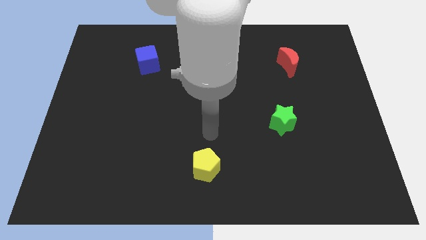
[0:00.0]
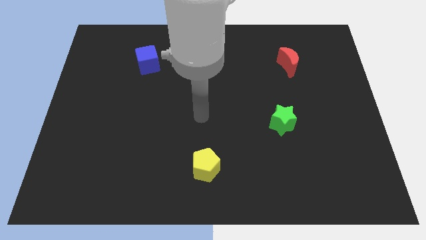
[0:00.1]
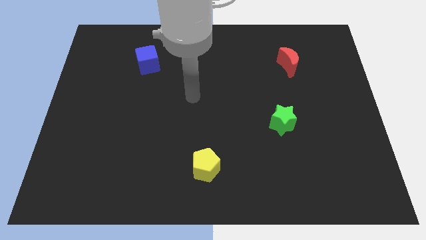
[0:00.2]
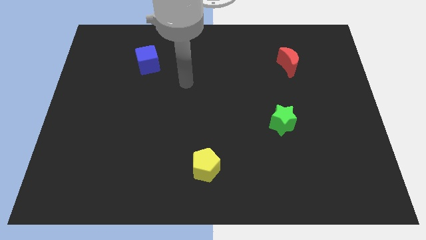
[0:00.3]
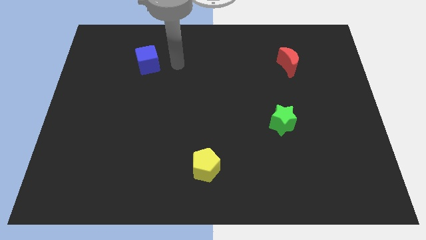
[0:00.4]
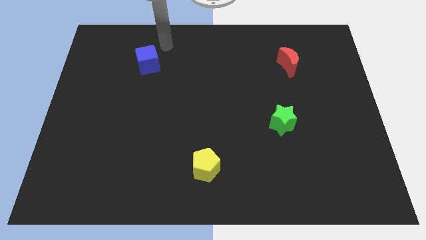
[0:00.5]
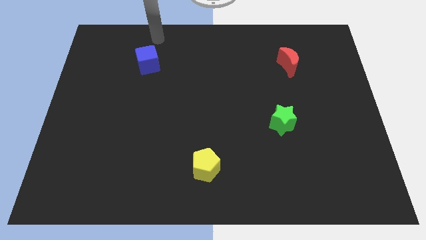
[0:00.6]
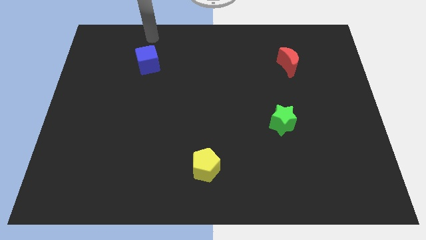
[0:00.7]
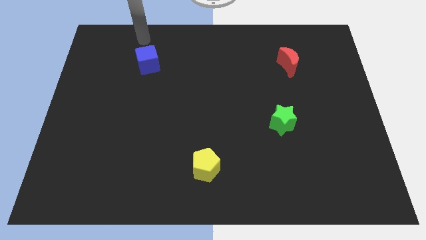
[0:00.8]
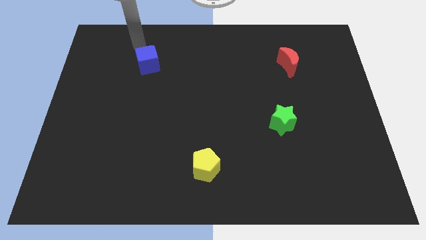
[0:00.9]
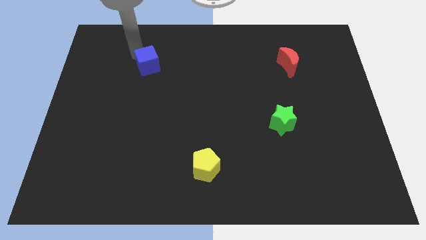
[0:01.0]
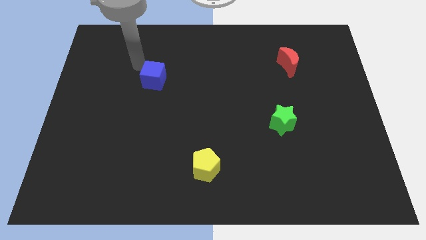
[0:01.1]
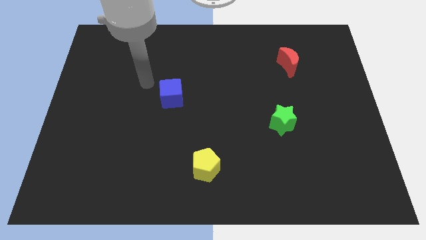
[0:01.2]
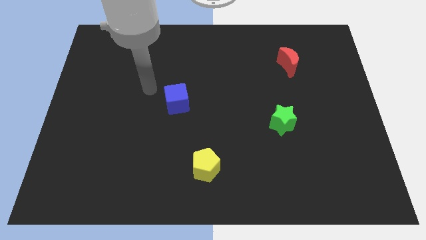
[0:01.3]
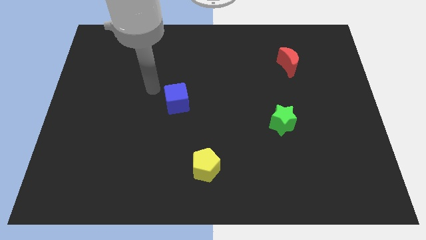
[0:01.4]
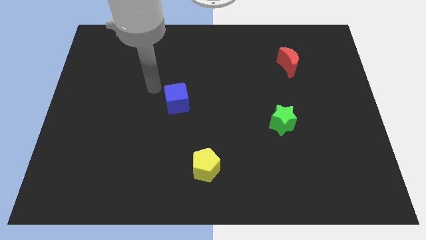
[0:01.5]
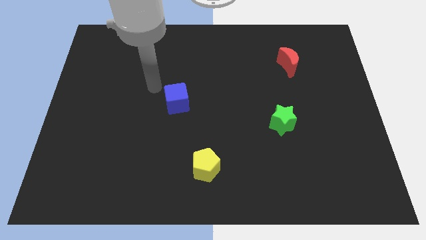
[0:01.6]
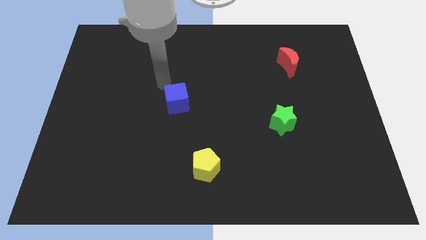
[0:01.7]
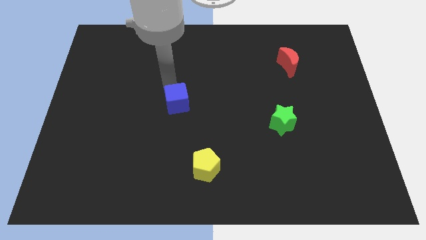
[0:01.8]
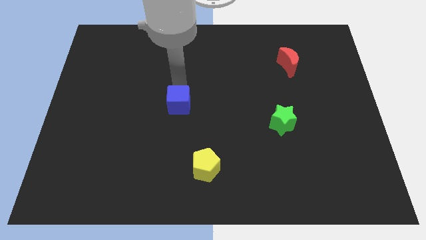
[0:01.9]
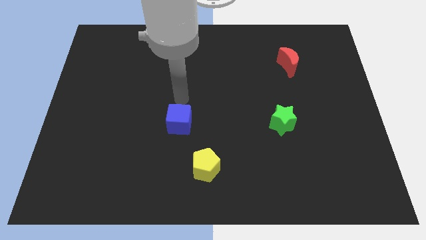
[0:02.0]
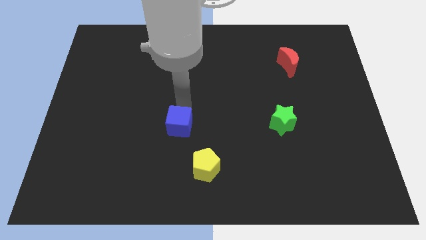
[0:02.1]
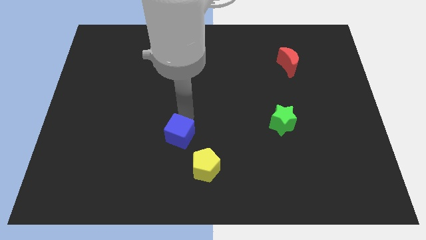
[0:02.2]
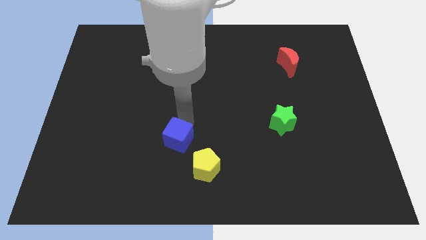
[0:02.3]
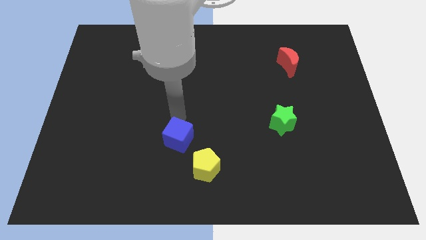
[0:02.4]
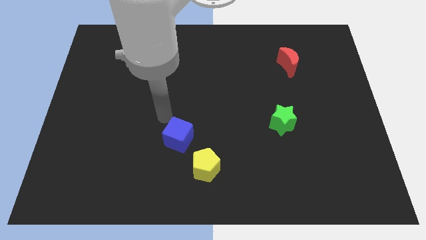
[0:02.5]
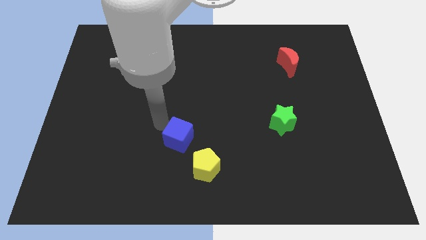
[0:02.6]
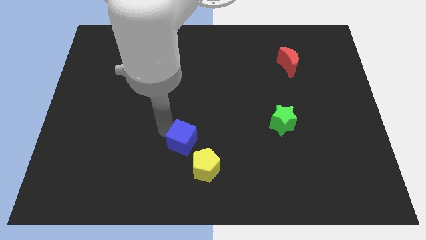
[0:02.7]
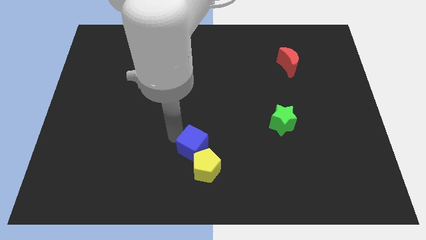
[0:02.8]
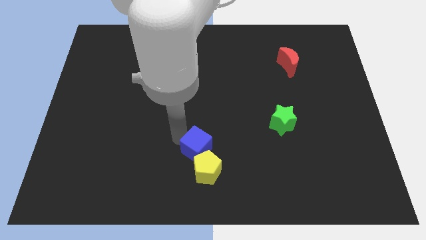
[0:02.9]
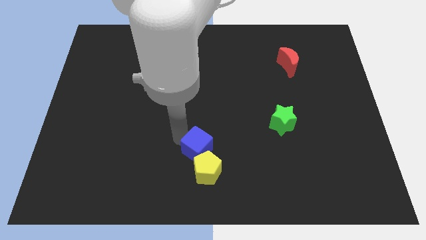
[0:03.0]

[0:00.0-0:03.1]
push the blue cube towards the yellow pentagon

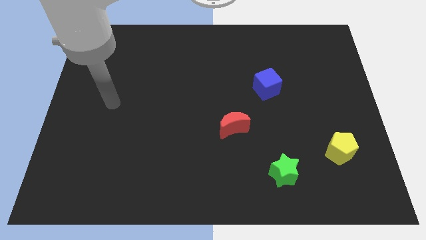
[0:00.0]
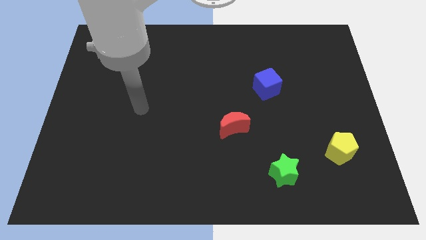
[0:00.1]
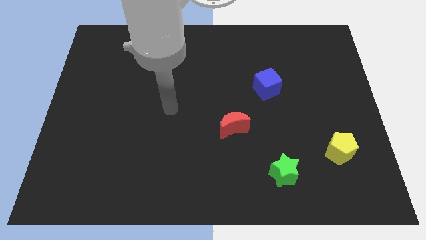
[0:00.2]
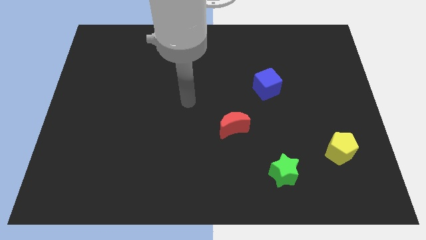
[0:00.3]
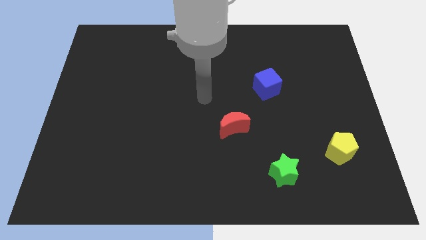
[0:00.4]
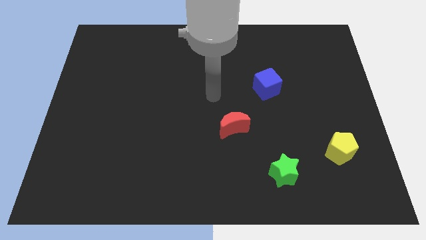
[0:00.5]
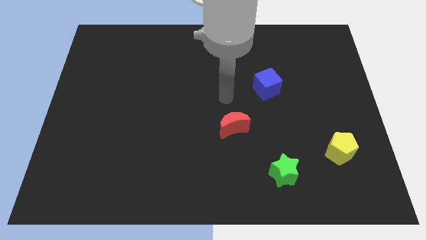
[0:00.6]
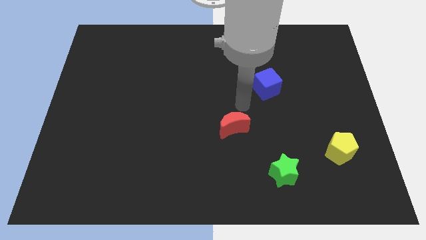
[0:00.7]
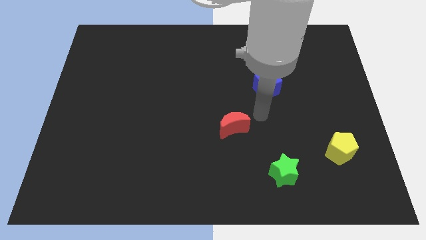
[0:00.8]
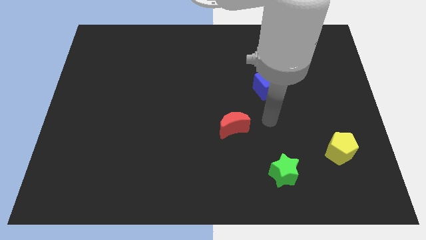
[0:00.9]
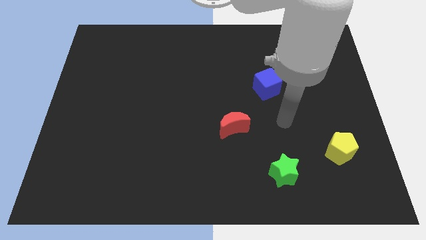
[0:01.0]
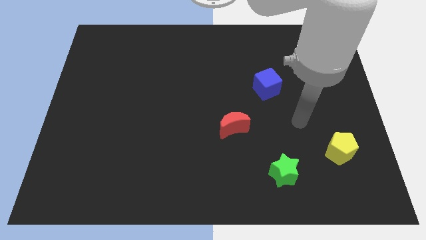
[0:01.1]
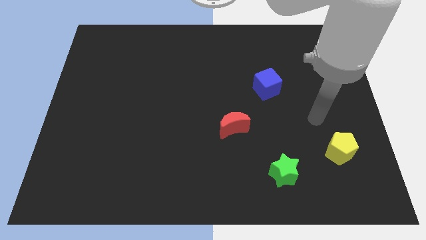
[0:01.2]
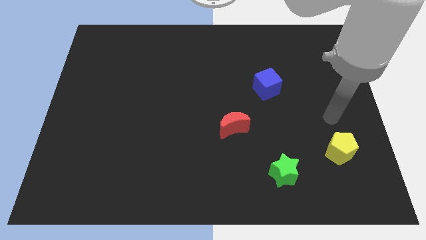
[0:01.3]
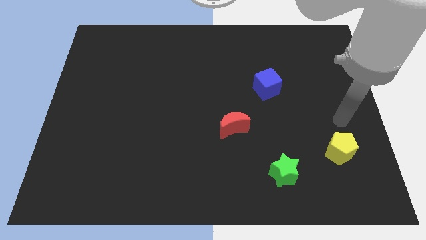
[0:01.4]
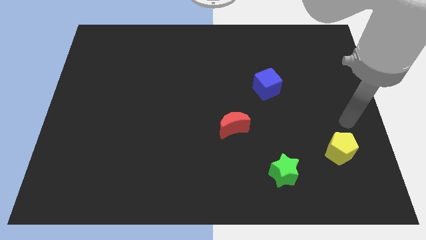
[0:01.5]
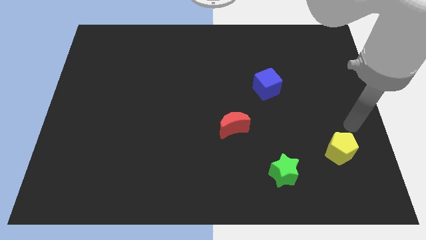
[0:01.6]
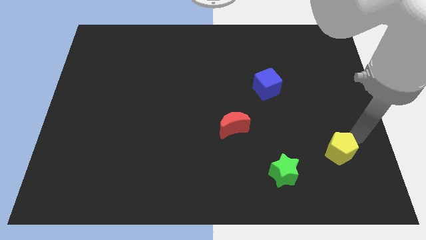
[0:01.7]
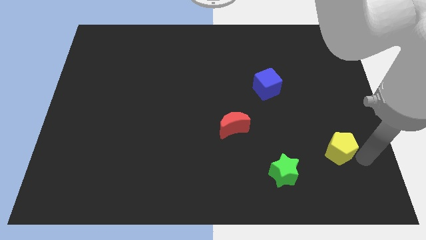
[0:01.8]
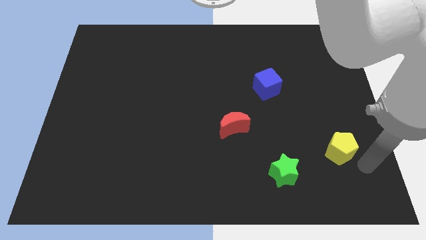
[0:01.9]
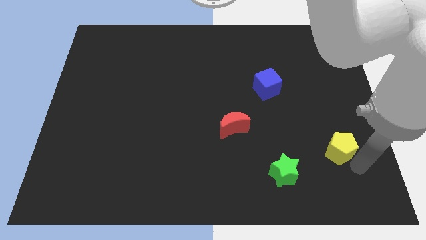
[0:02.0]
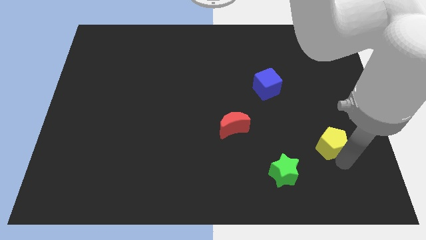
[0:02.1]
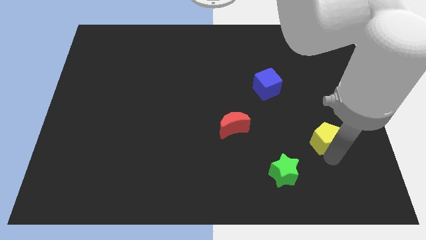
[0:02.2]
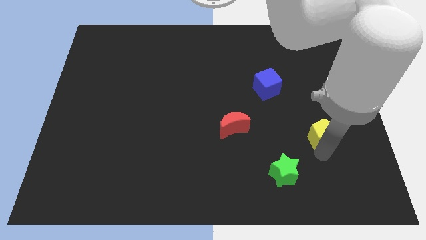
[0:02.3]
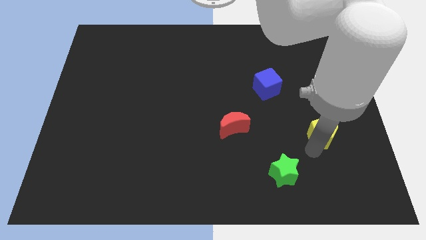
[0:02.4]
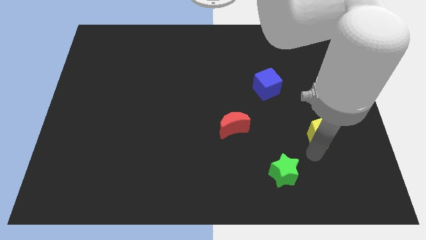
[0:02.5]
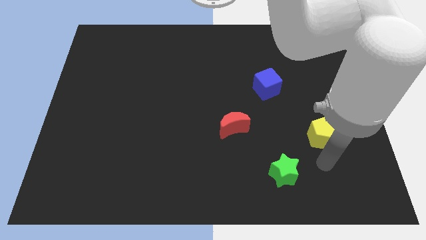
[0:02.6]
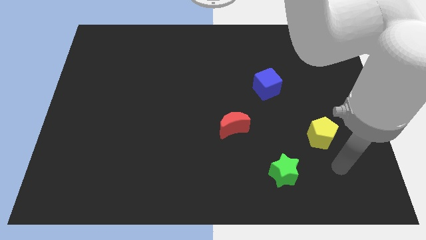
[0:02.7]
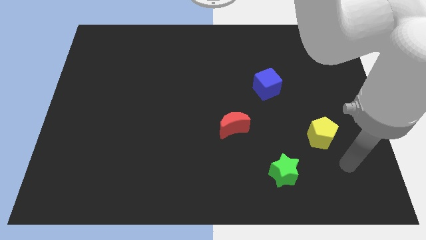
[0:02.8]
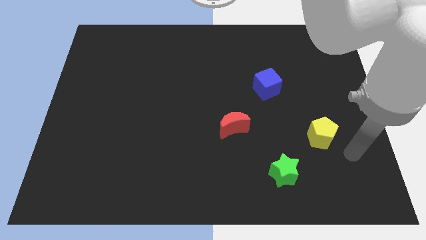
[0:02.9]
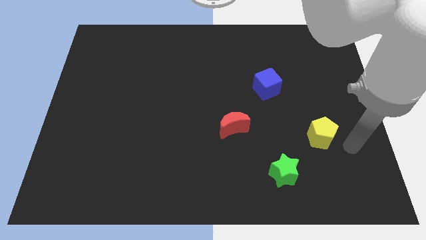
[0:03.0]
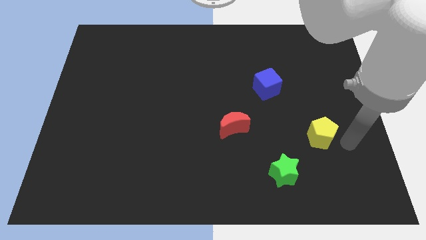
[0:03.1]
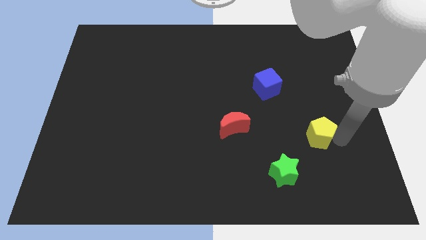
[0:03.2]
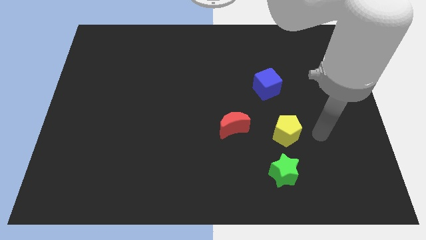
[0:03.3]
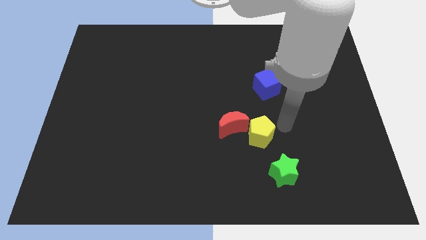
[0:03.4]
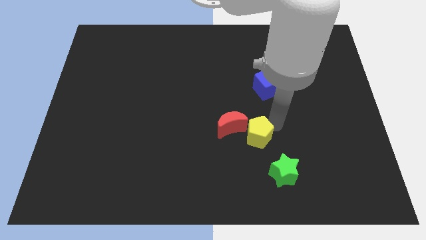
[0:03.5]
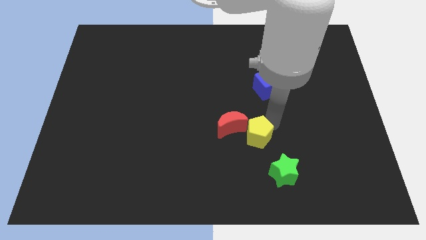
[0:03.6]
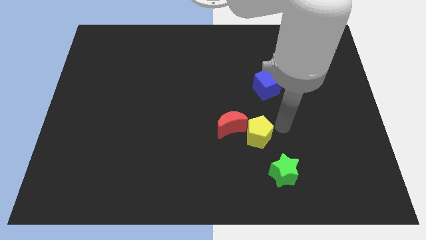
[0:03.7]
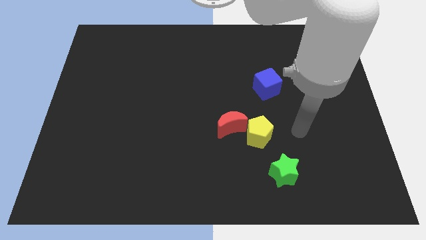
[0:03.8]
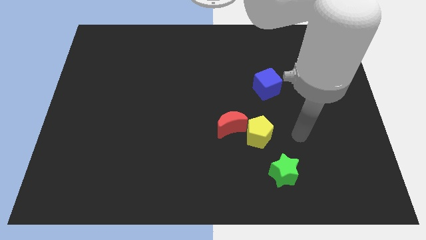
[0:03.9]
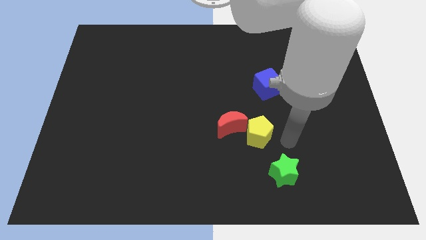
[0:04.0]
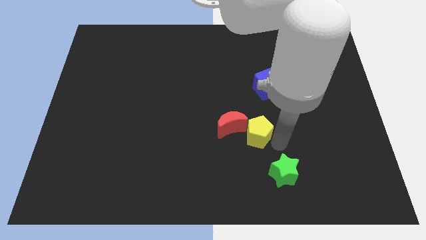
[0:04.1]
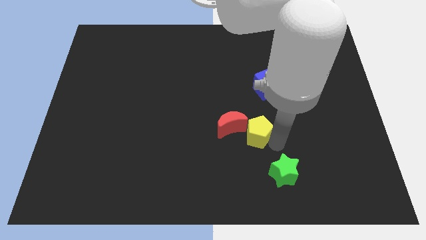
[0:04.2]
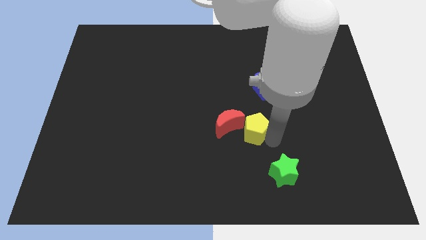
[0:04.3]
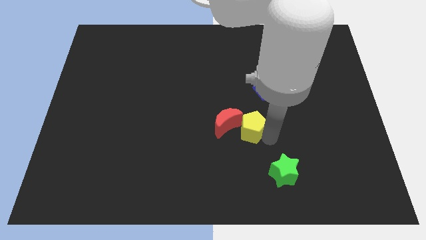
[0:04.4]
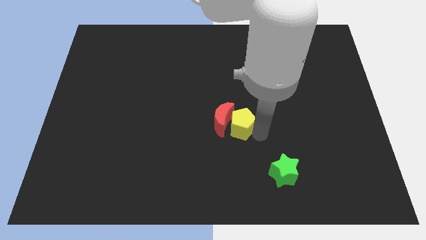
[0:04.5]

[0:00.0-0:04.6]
push the yellow block close to the red block

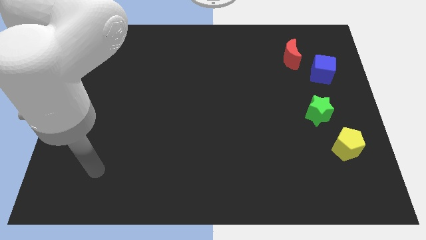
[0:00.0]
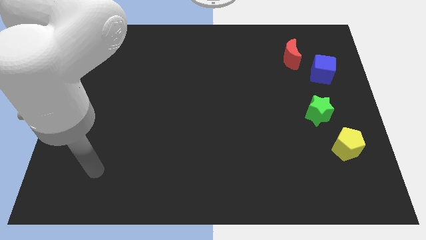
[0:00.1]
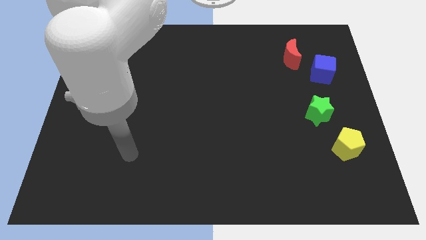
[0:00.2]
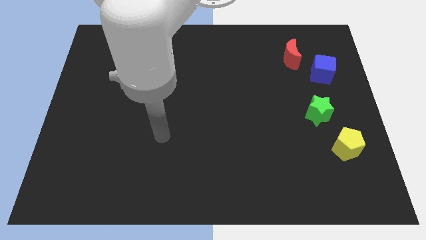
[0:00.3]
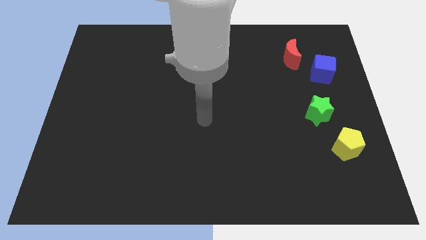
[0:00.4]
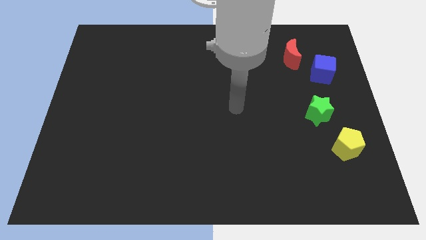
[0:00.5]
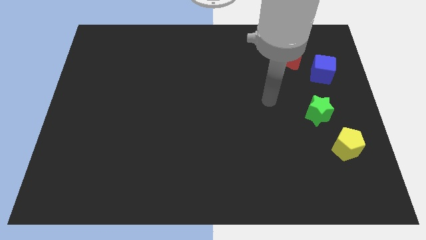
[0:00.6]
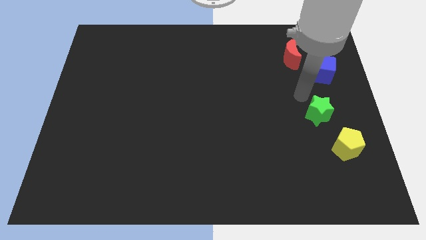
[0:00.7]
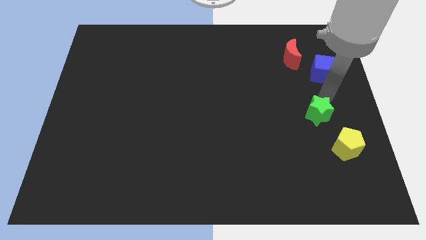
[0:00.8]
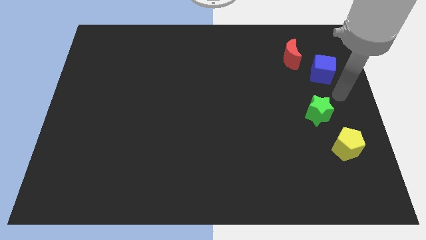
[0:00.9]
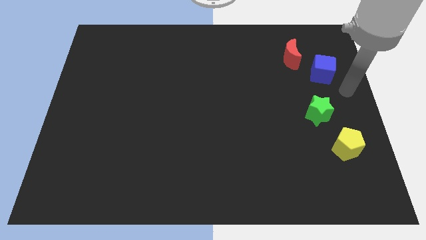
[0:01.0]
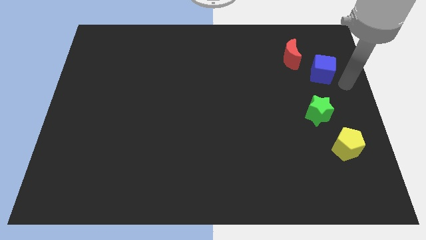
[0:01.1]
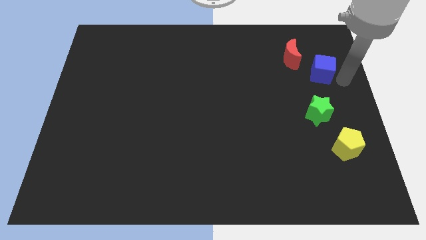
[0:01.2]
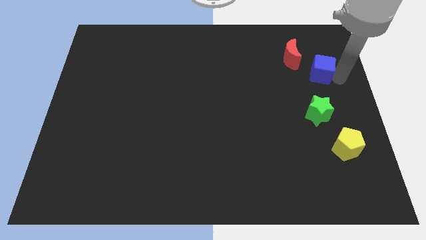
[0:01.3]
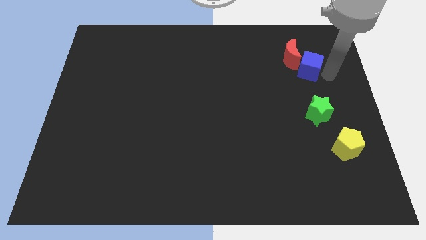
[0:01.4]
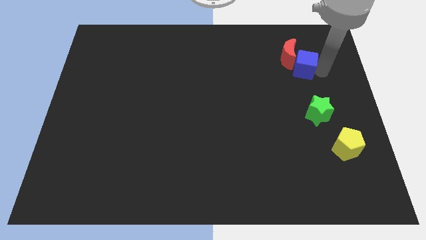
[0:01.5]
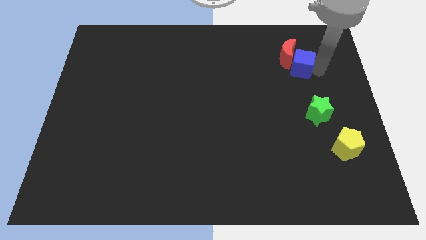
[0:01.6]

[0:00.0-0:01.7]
slide the blue cube next to the red block
